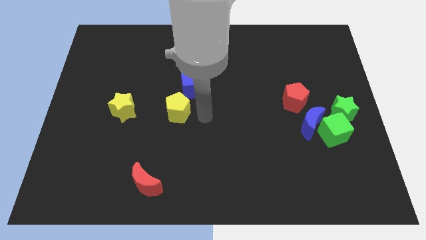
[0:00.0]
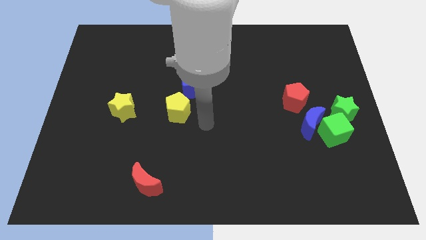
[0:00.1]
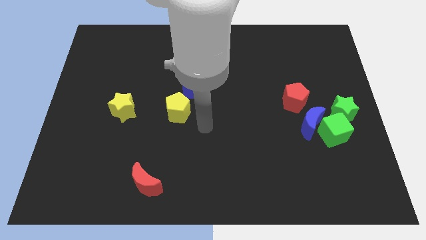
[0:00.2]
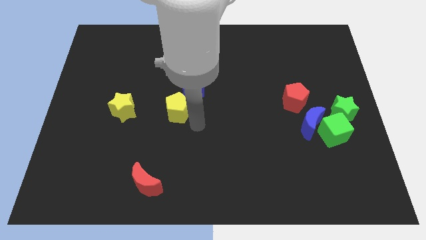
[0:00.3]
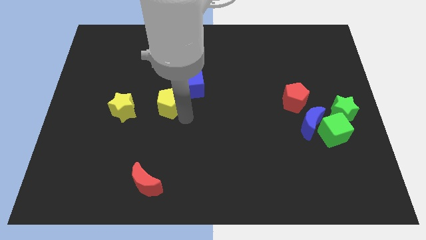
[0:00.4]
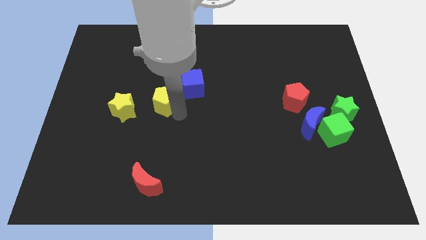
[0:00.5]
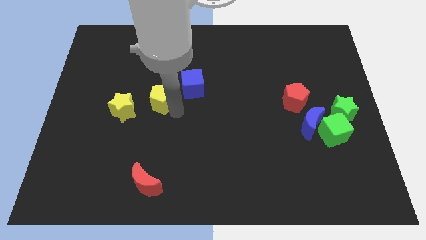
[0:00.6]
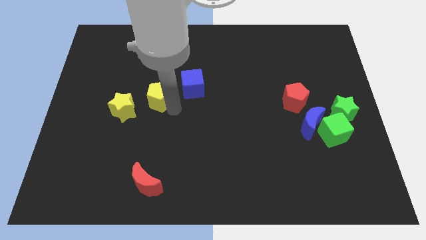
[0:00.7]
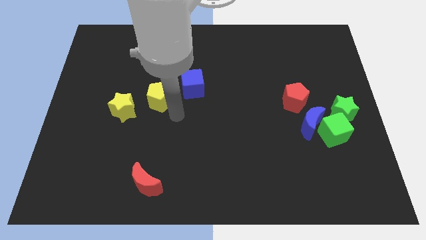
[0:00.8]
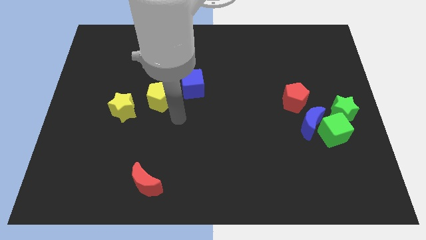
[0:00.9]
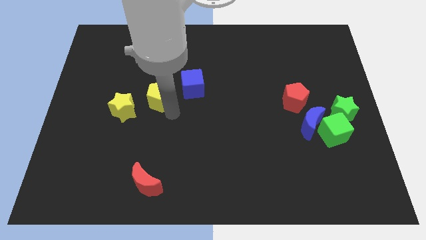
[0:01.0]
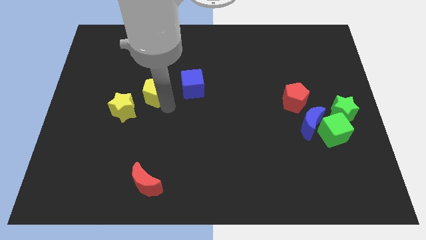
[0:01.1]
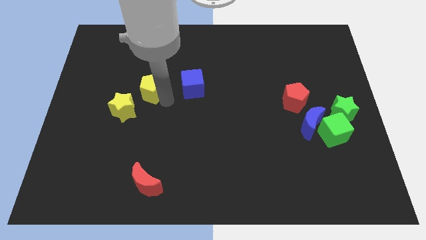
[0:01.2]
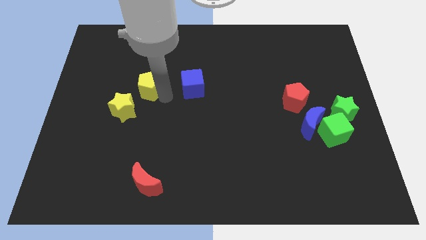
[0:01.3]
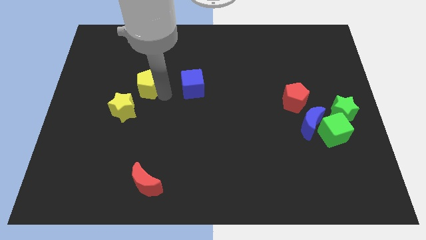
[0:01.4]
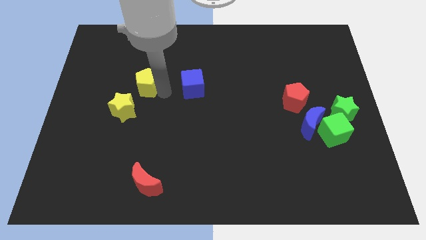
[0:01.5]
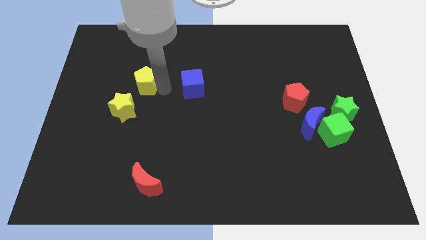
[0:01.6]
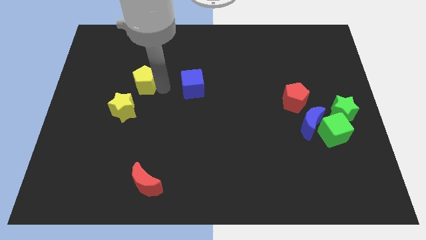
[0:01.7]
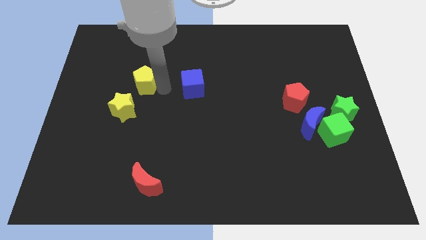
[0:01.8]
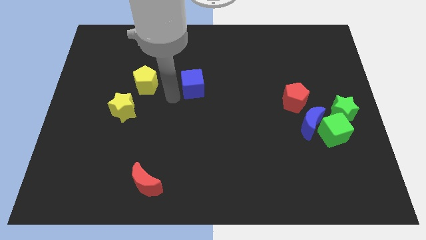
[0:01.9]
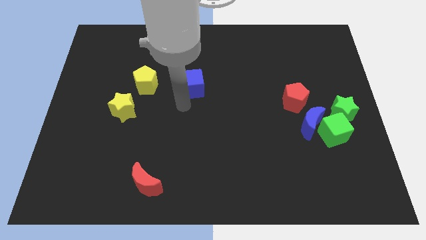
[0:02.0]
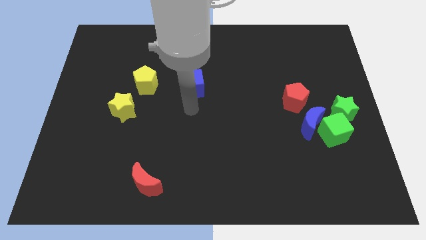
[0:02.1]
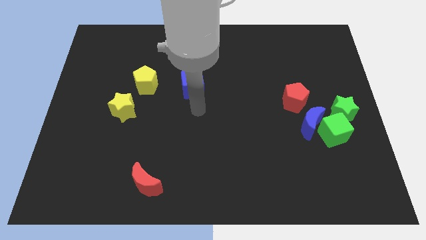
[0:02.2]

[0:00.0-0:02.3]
push the yellow pentagon diagonal above yellow star

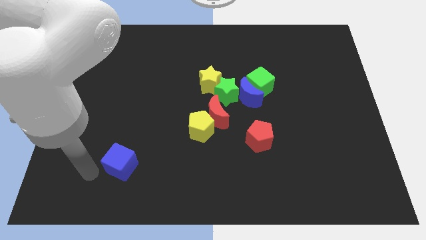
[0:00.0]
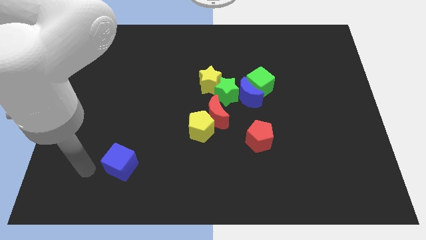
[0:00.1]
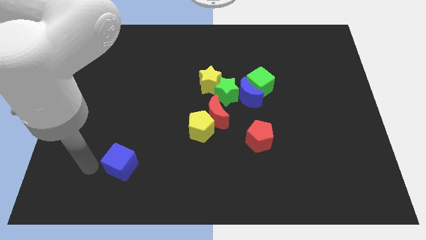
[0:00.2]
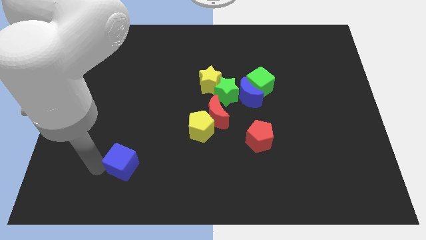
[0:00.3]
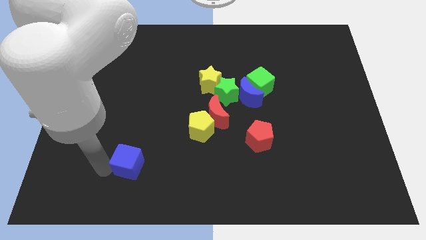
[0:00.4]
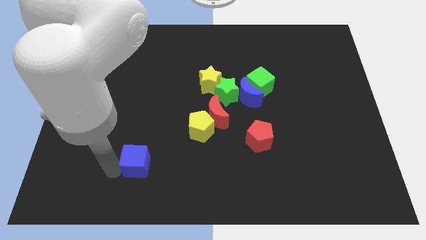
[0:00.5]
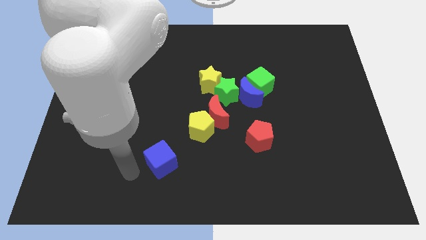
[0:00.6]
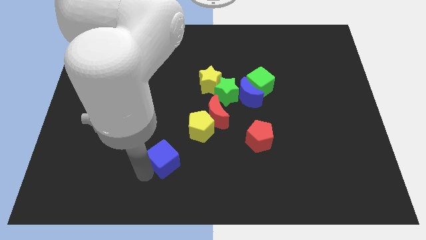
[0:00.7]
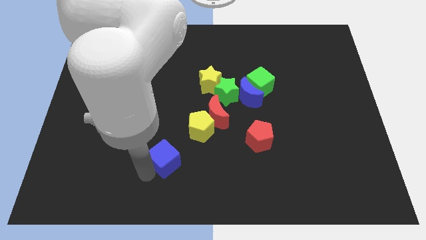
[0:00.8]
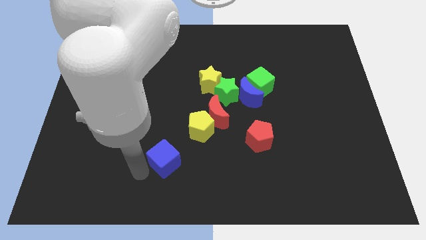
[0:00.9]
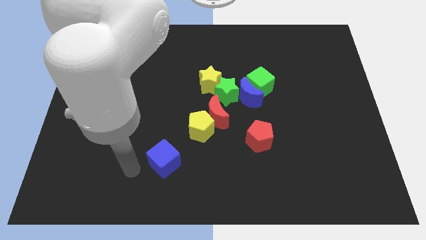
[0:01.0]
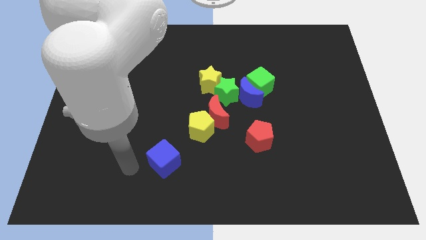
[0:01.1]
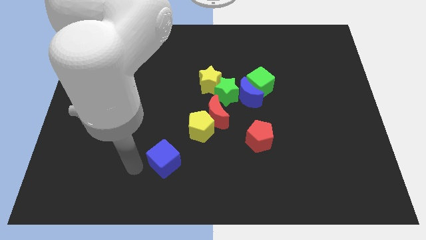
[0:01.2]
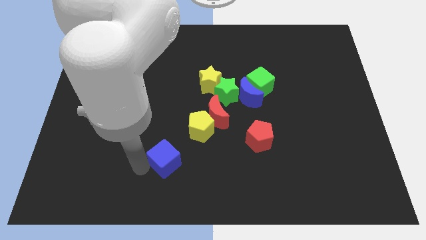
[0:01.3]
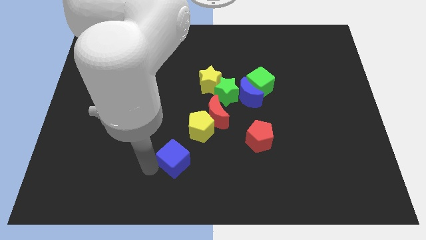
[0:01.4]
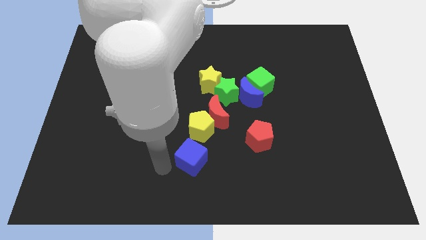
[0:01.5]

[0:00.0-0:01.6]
slide the blue cube towards the bottom side of the yellow pentagon

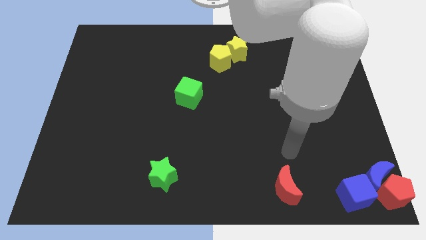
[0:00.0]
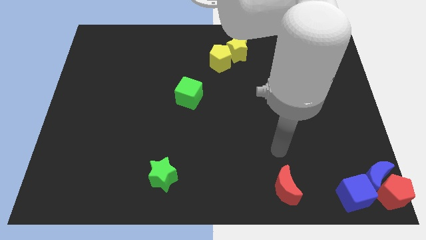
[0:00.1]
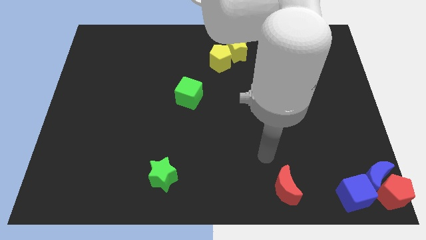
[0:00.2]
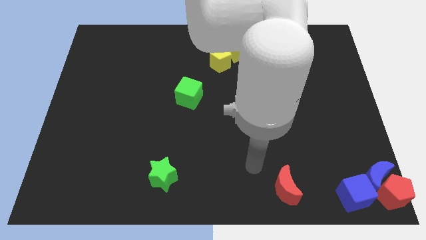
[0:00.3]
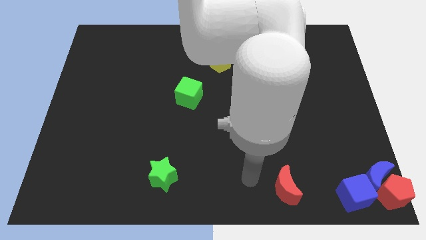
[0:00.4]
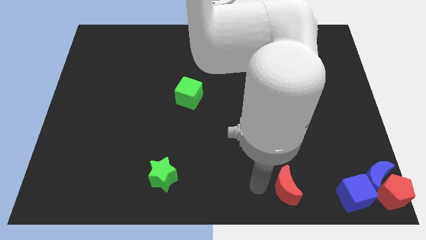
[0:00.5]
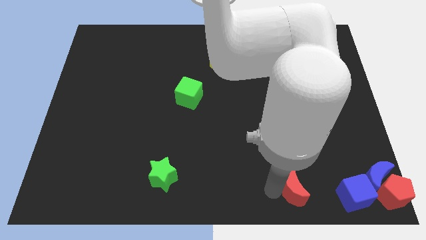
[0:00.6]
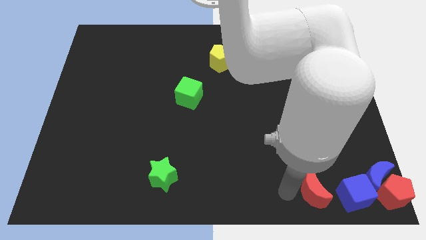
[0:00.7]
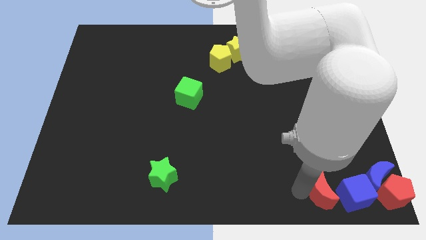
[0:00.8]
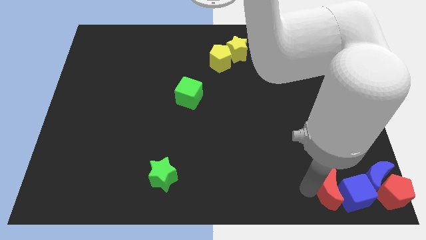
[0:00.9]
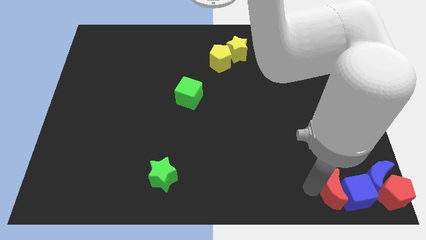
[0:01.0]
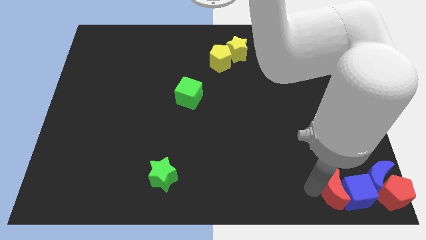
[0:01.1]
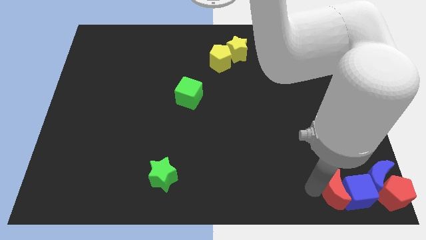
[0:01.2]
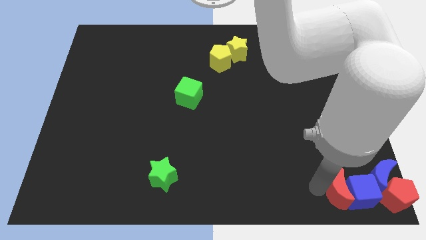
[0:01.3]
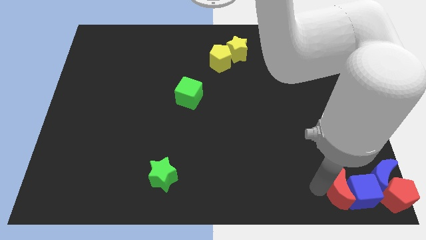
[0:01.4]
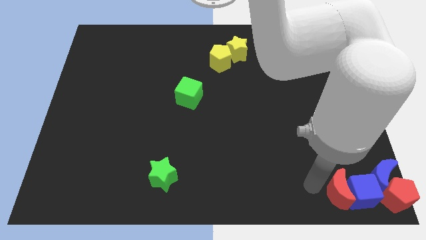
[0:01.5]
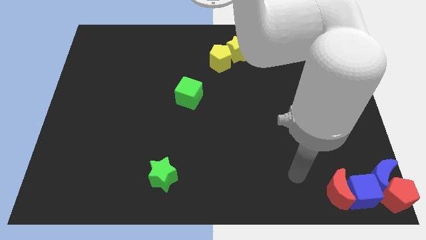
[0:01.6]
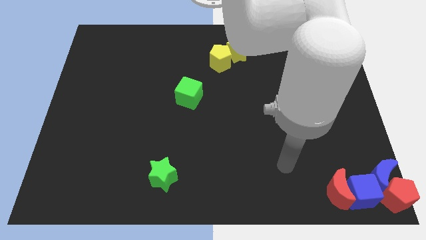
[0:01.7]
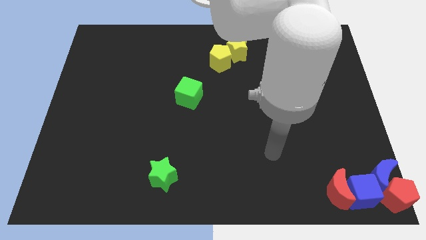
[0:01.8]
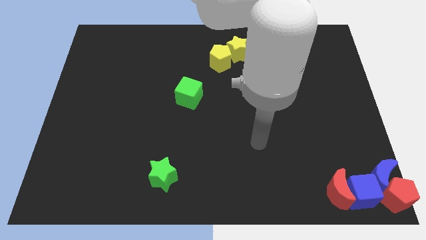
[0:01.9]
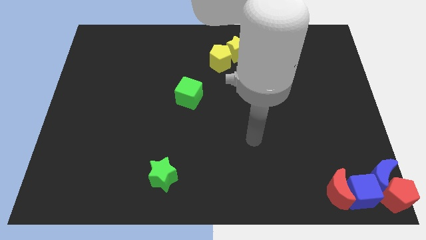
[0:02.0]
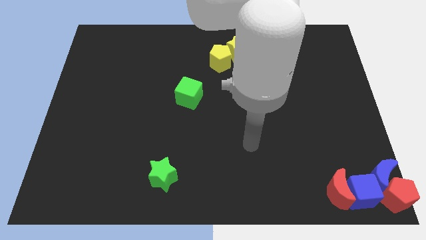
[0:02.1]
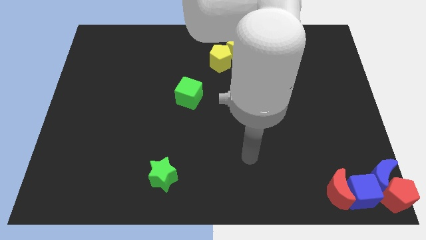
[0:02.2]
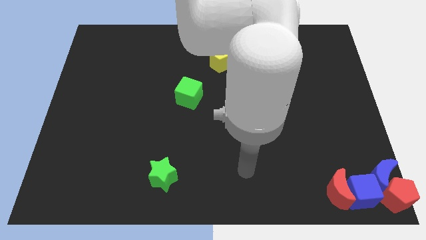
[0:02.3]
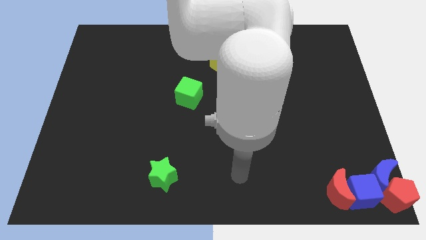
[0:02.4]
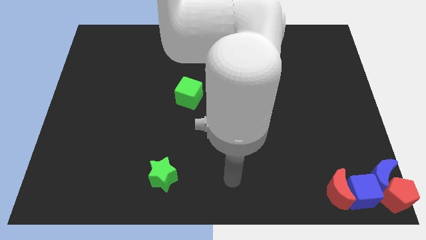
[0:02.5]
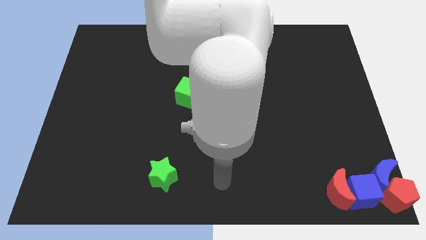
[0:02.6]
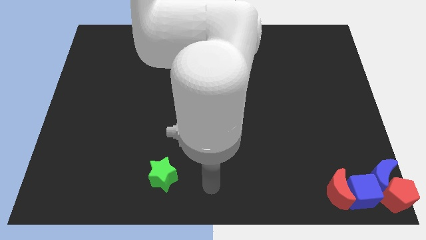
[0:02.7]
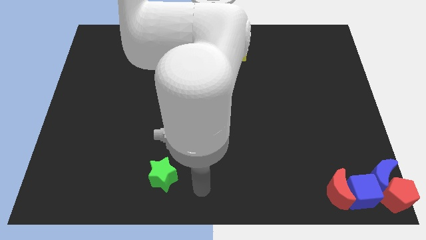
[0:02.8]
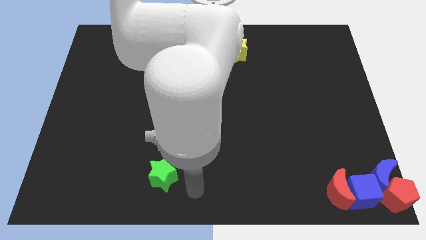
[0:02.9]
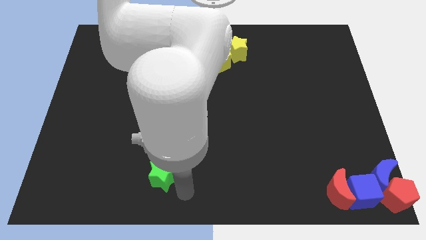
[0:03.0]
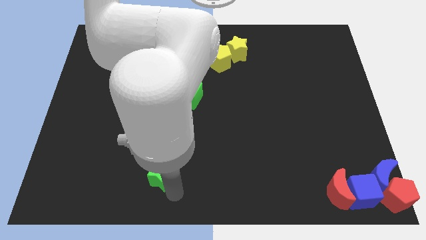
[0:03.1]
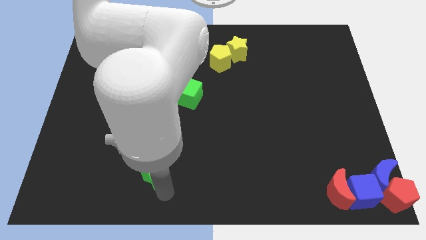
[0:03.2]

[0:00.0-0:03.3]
push the red moon into the blue cube

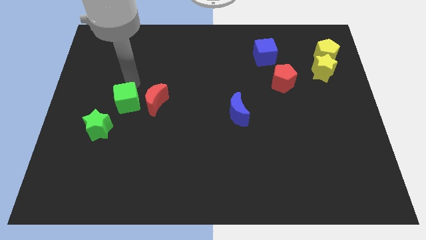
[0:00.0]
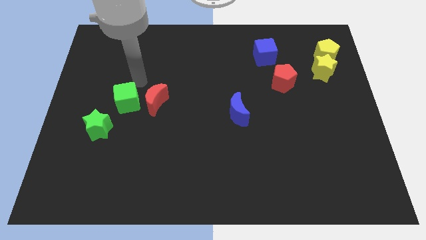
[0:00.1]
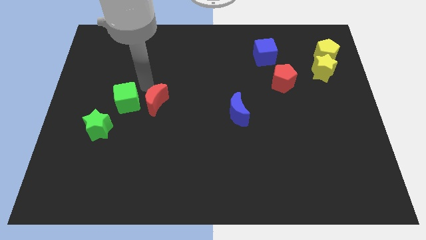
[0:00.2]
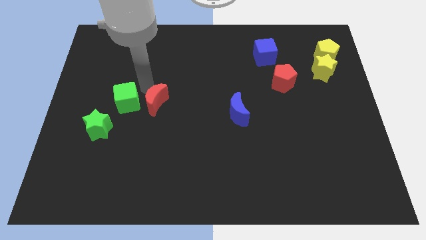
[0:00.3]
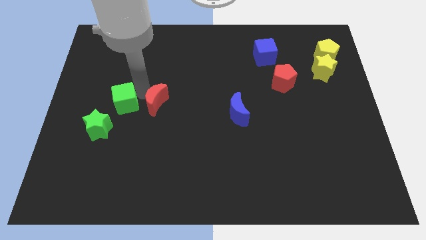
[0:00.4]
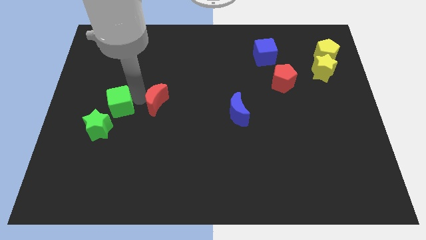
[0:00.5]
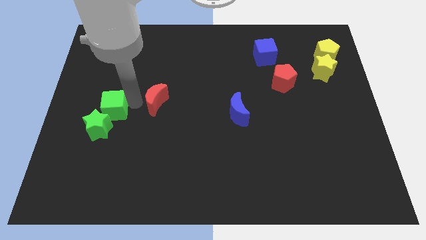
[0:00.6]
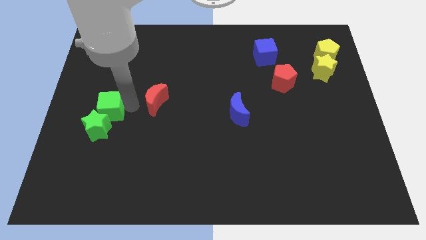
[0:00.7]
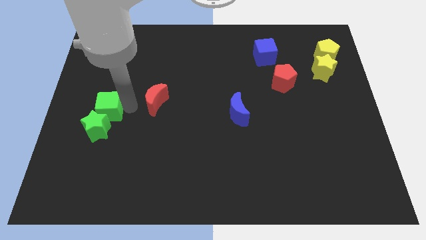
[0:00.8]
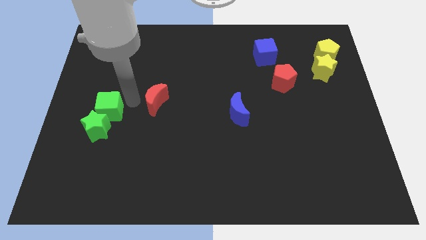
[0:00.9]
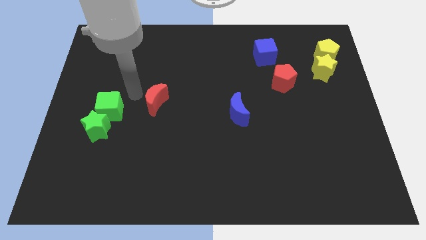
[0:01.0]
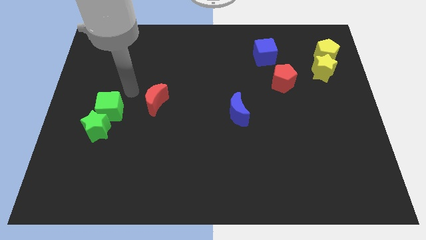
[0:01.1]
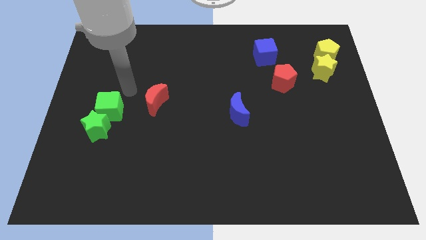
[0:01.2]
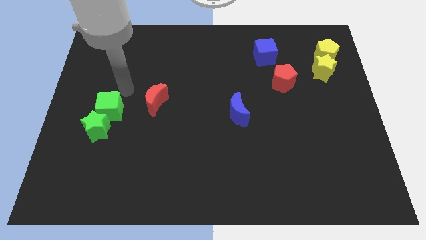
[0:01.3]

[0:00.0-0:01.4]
slide the green cube into the green star

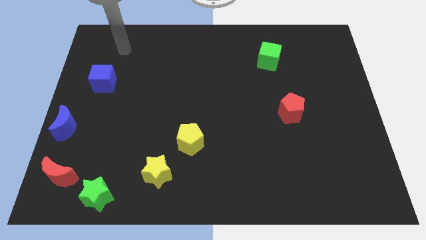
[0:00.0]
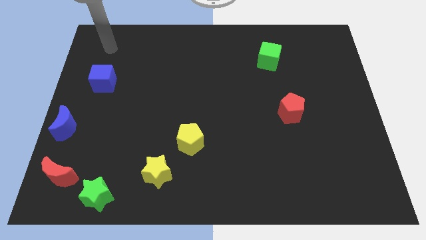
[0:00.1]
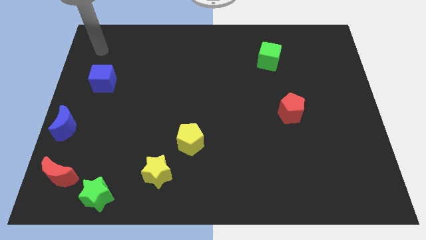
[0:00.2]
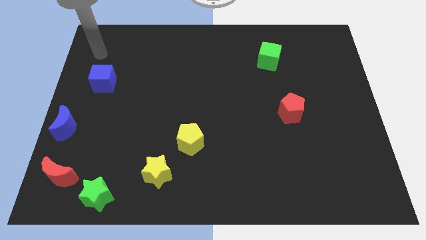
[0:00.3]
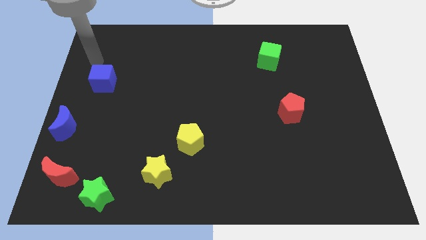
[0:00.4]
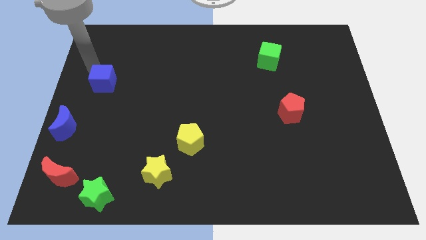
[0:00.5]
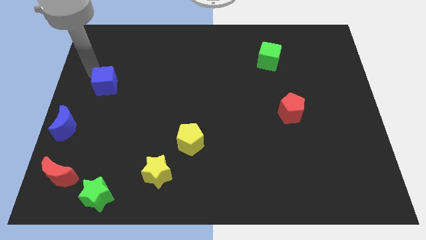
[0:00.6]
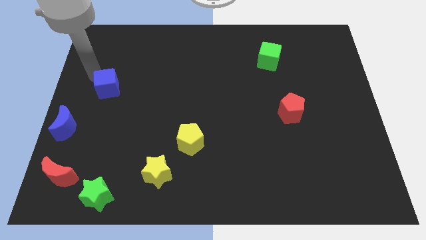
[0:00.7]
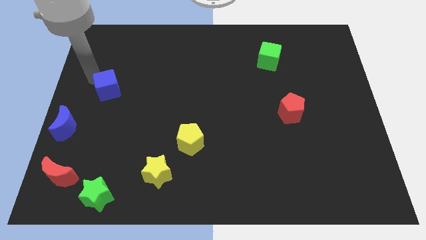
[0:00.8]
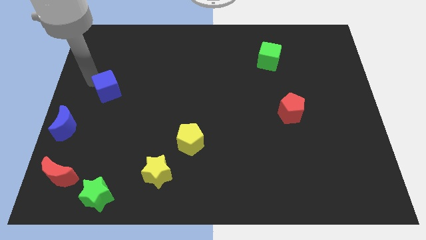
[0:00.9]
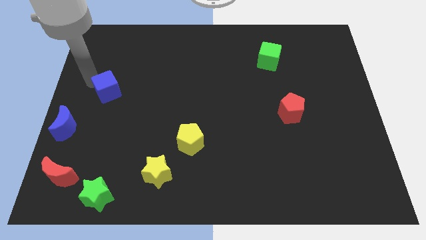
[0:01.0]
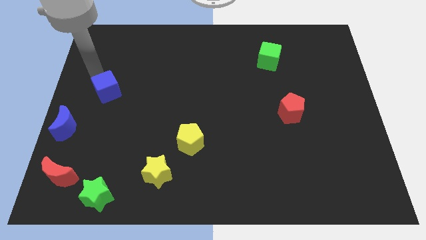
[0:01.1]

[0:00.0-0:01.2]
move the blue cube slightly towards the bottom side
